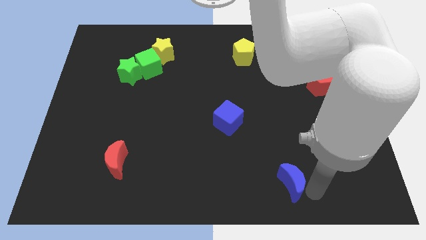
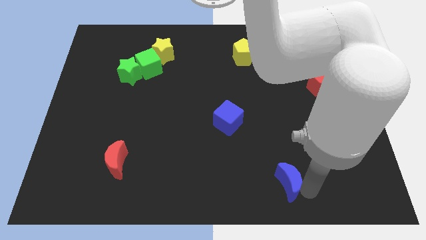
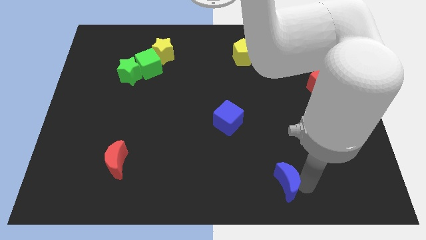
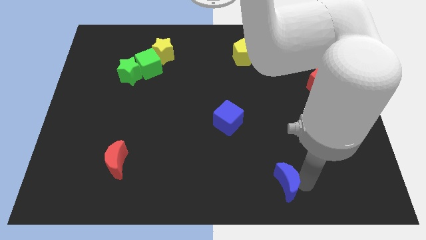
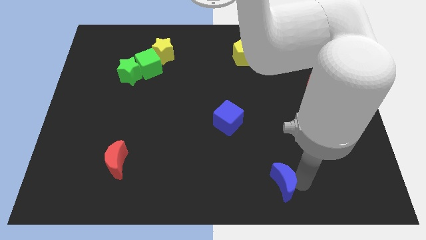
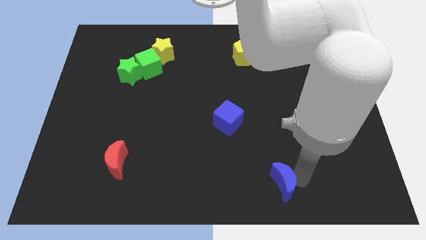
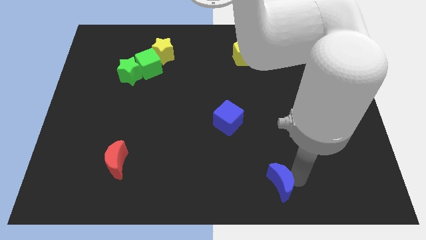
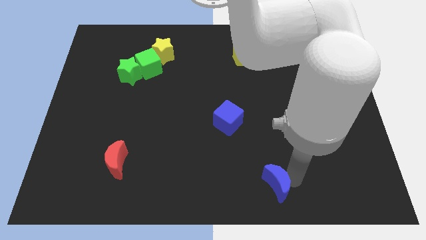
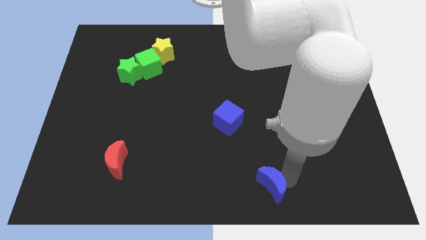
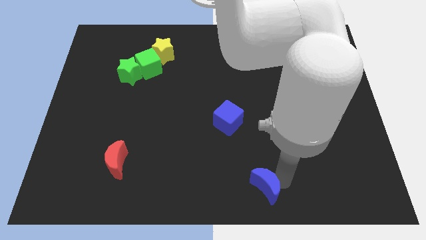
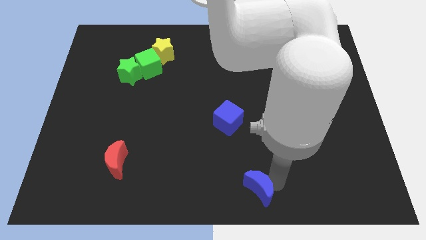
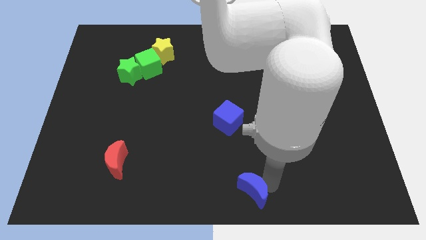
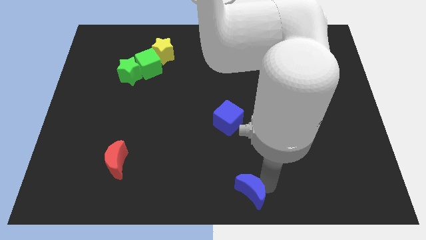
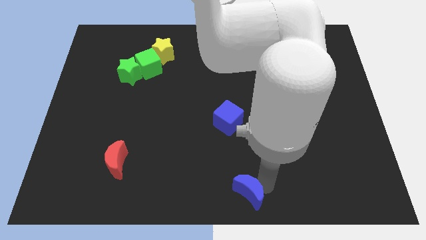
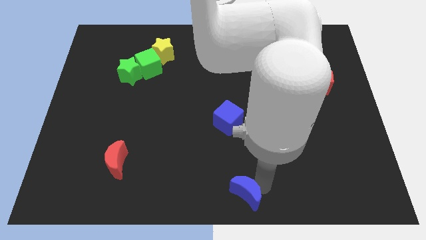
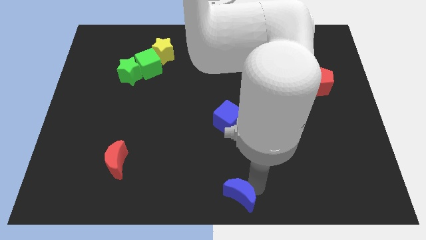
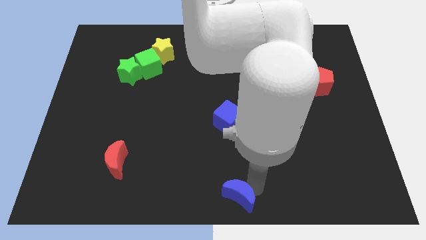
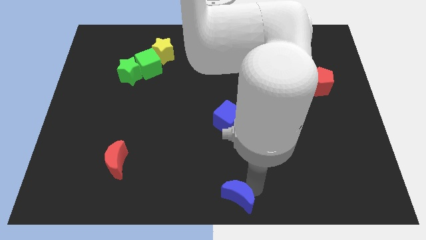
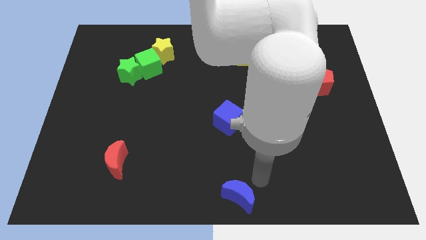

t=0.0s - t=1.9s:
place the blue crescent at the bottom center

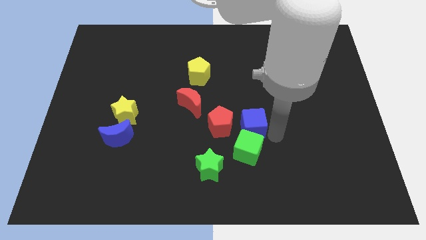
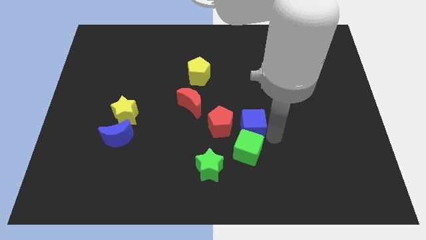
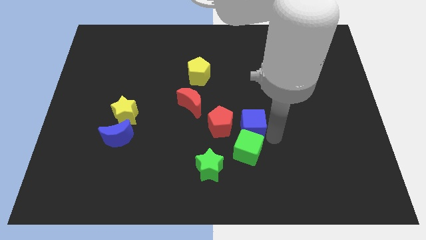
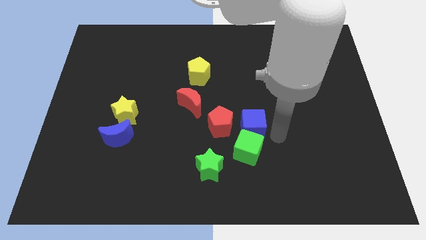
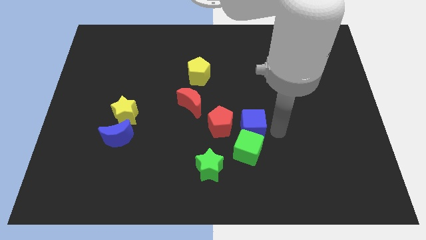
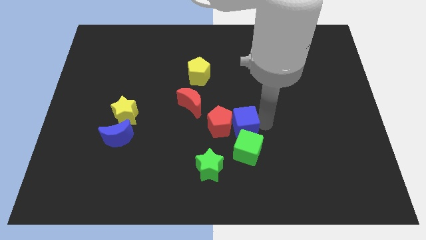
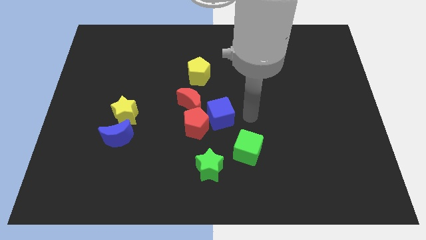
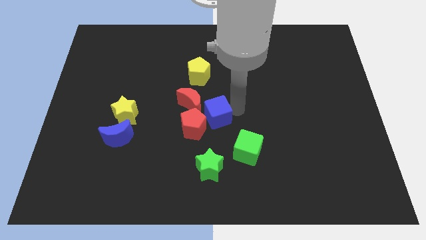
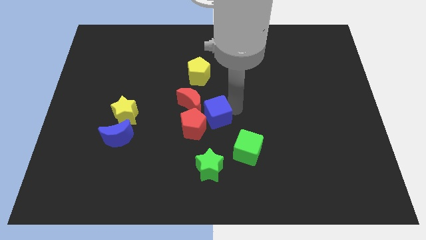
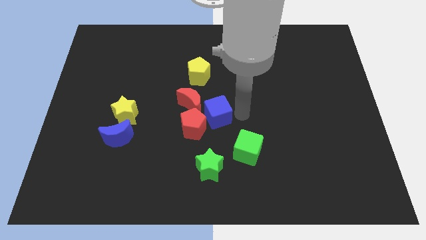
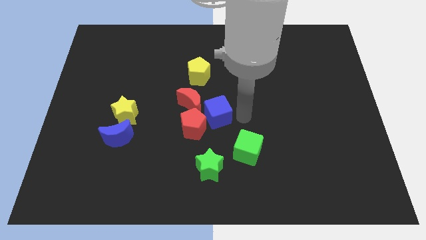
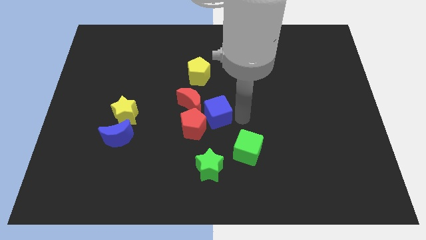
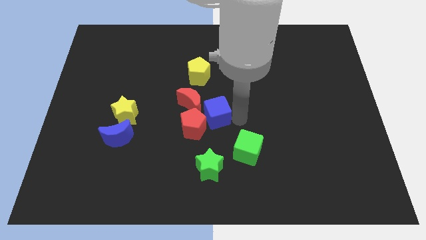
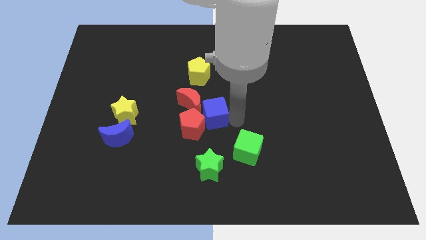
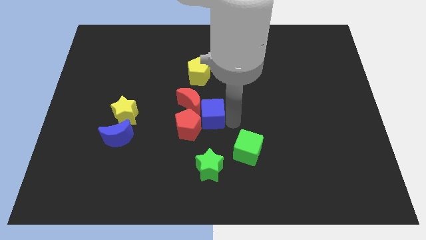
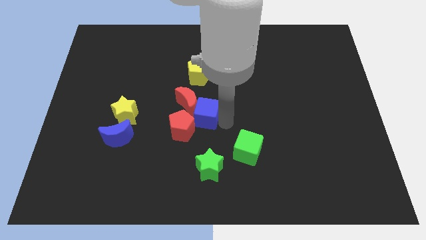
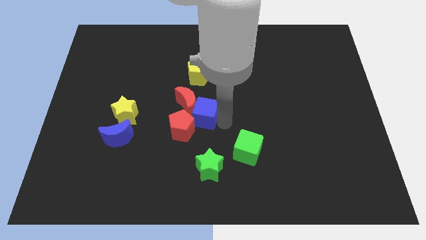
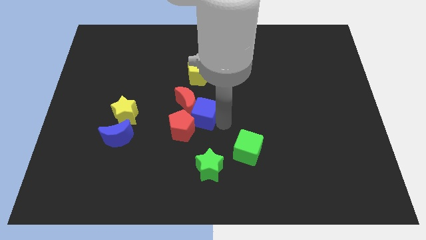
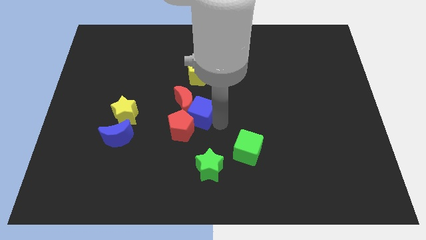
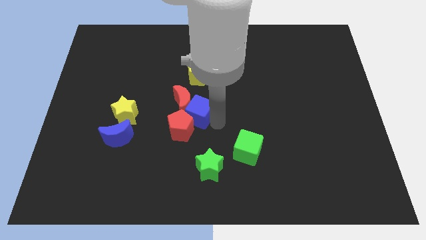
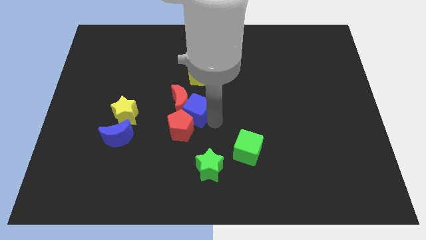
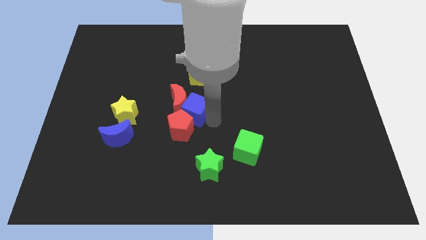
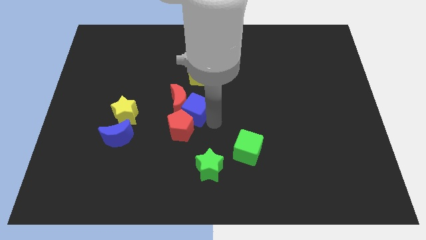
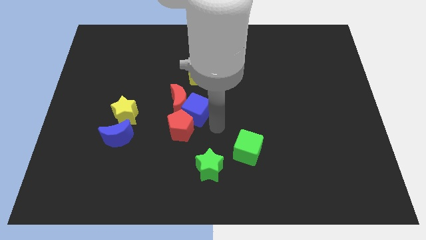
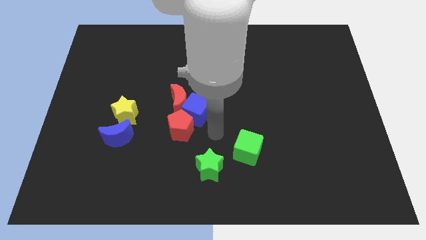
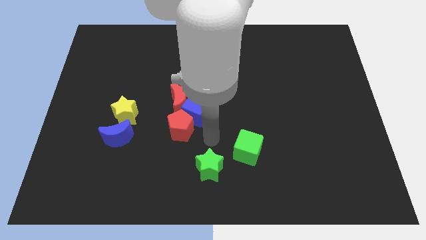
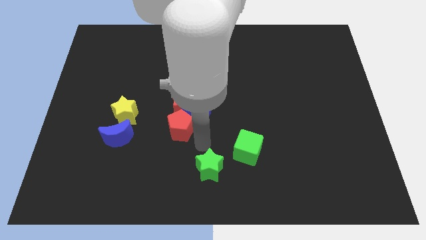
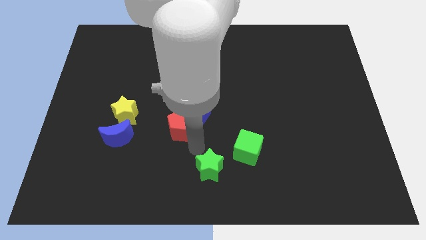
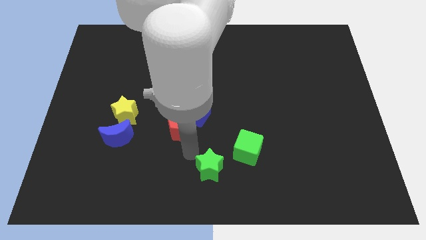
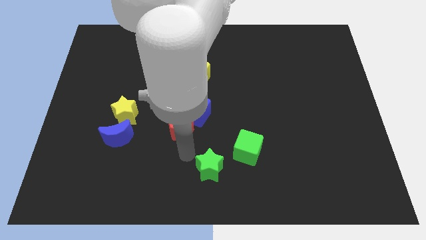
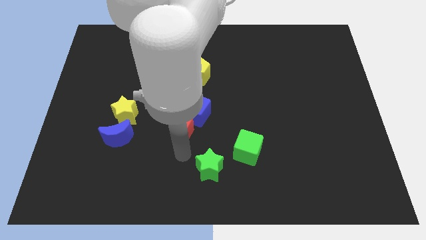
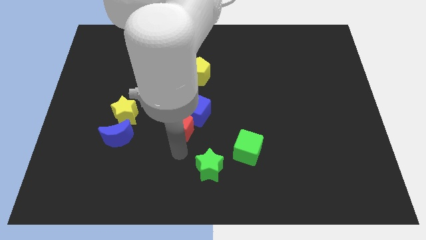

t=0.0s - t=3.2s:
push red crescent and red pentagon with blue cube

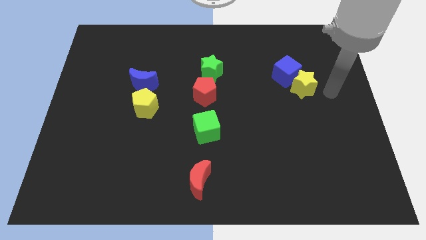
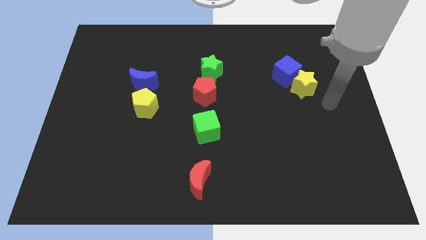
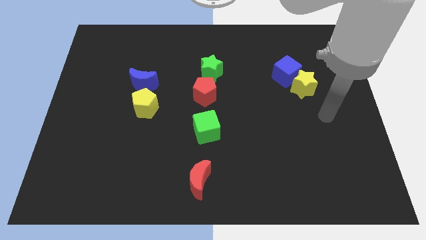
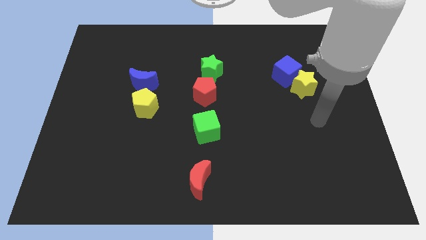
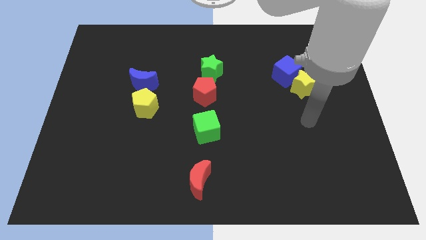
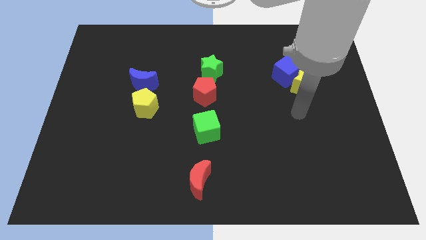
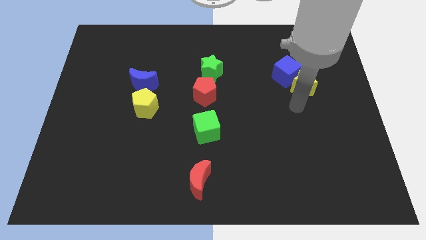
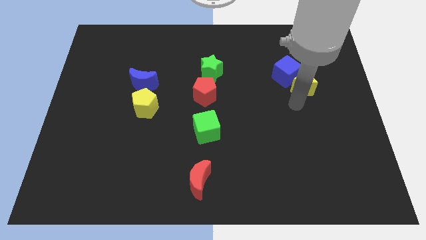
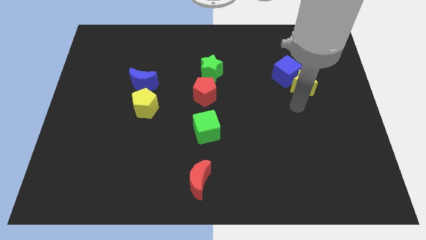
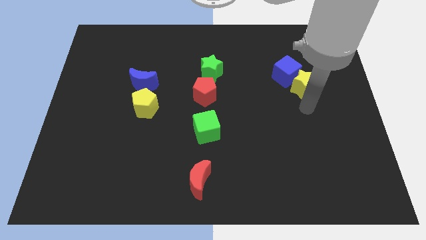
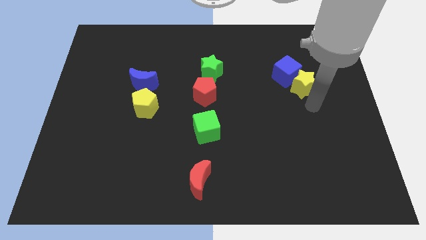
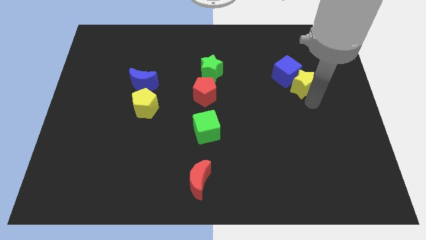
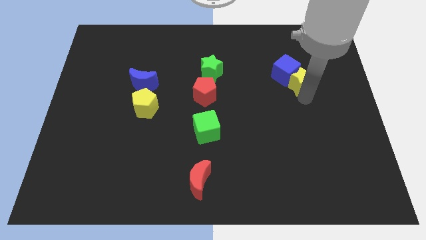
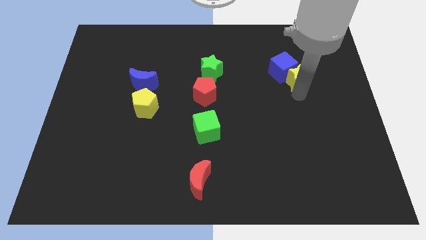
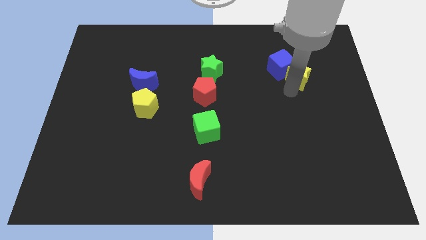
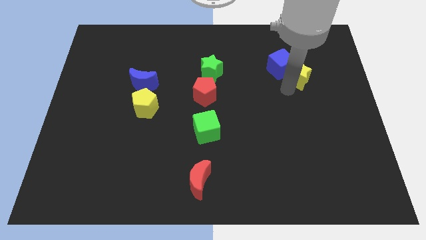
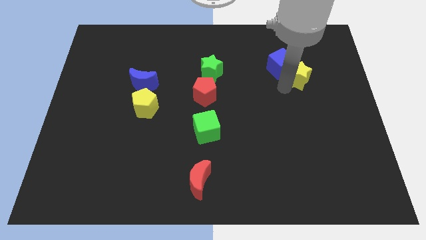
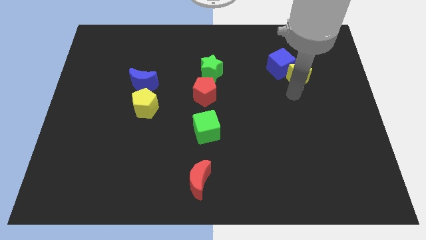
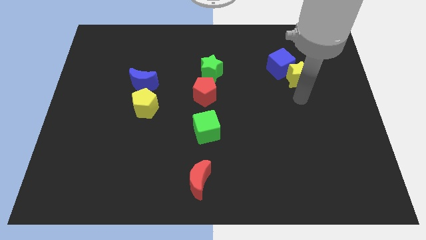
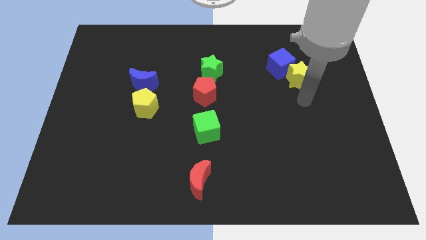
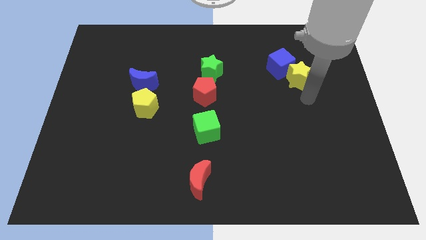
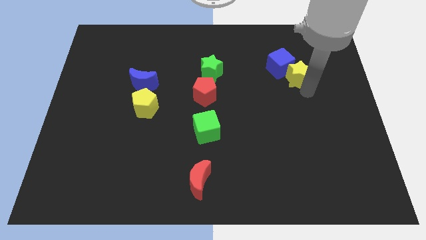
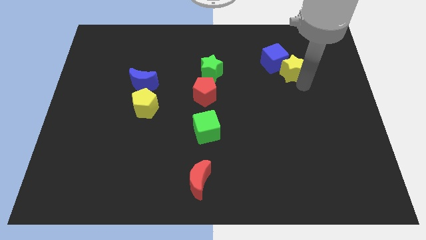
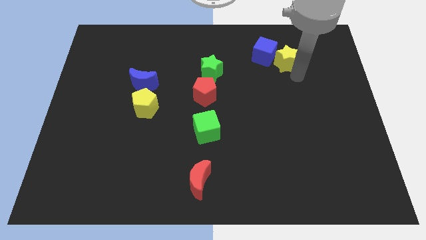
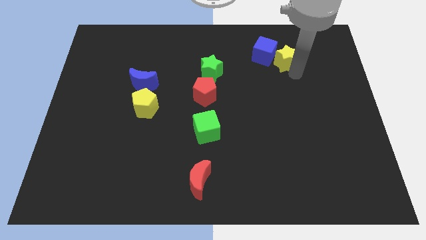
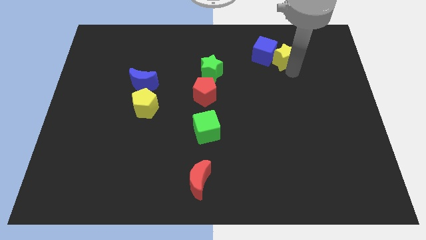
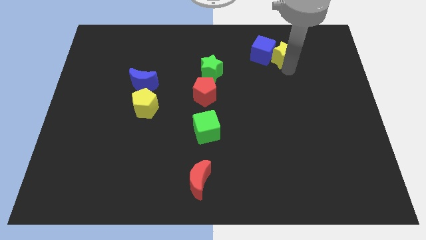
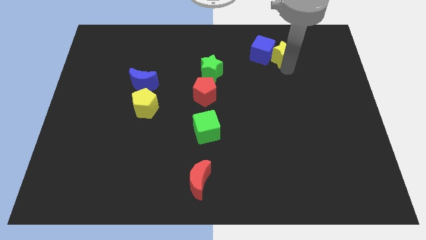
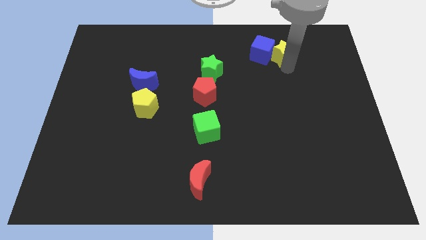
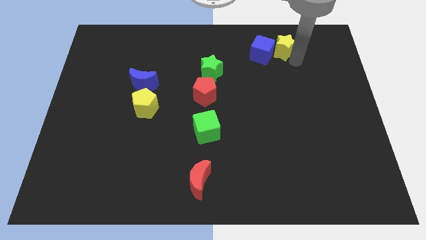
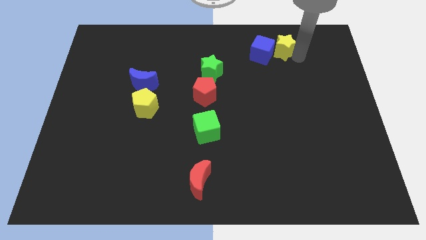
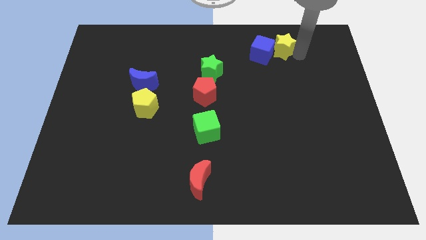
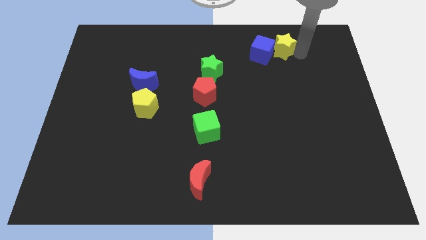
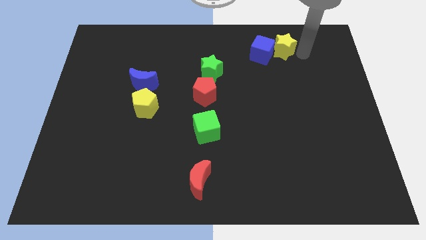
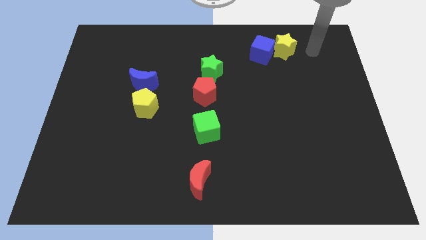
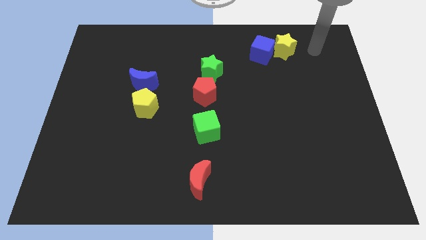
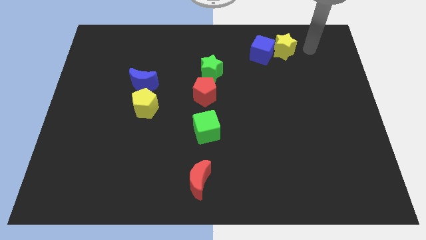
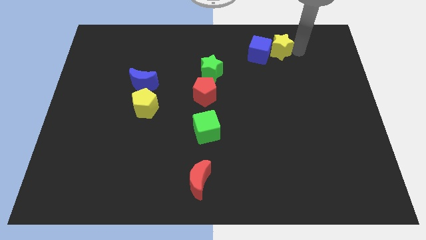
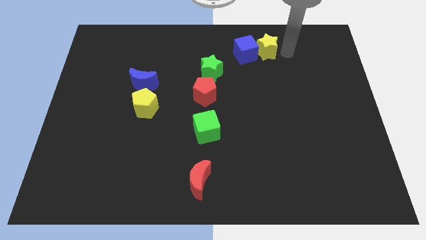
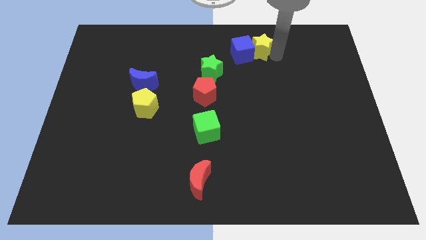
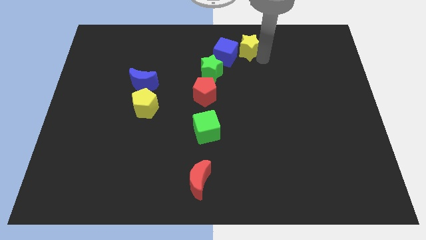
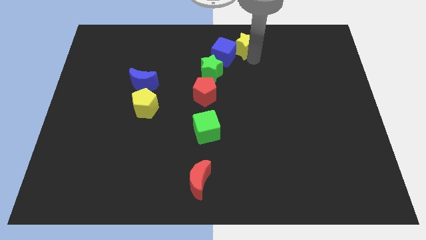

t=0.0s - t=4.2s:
move the yellow star into the blue cube towards the top of the board
